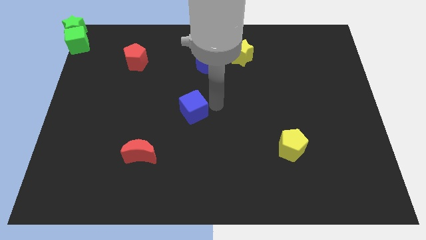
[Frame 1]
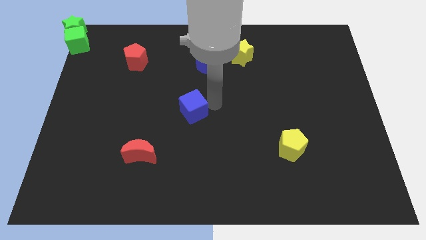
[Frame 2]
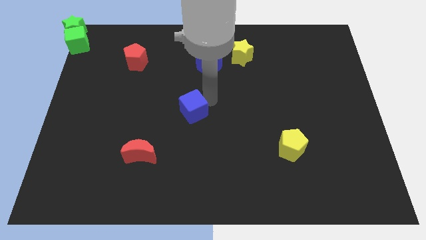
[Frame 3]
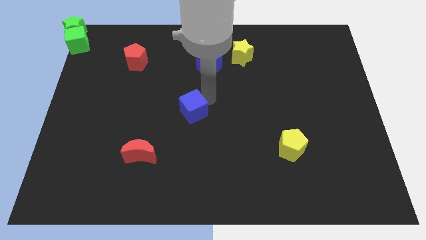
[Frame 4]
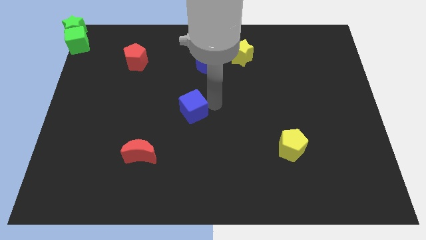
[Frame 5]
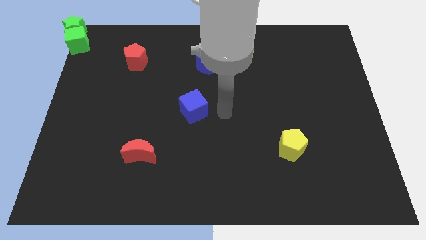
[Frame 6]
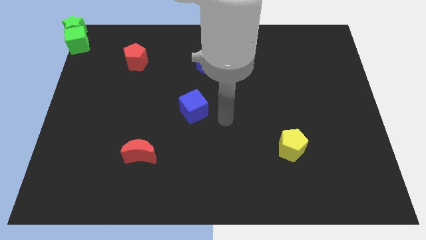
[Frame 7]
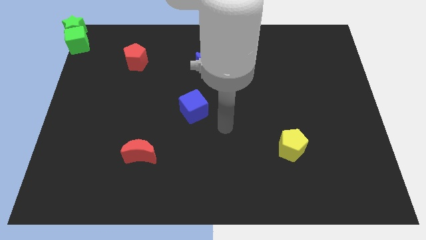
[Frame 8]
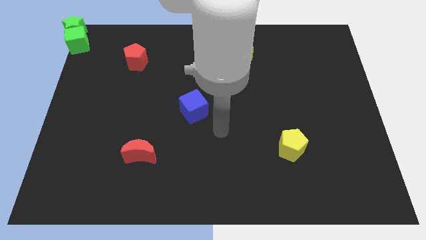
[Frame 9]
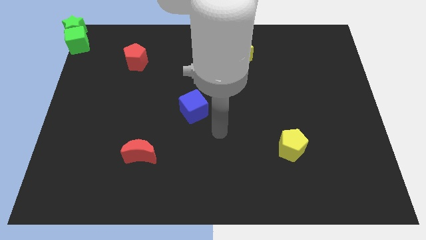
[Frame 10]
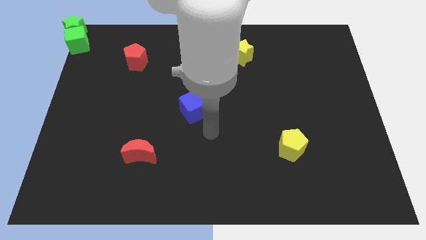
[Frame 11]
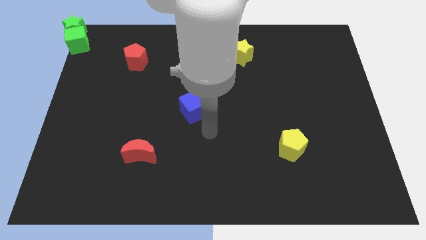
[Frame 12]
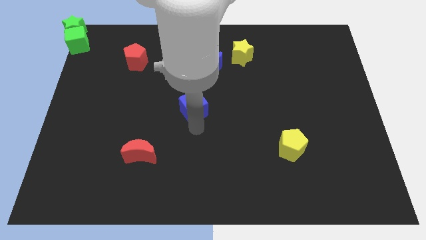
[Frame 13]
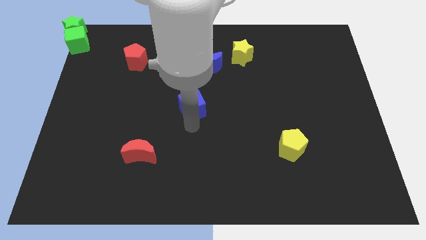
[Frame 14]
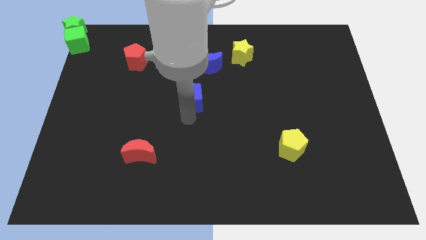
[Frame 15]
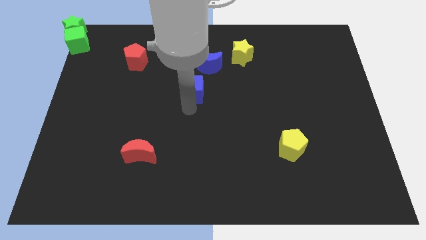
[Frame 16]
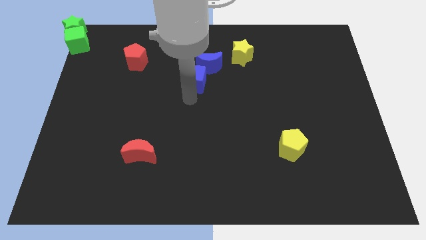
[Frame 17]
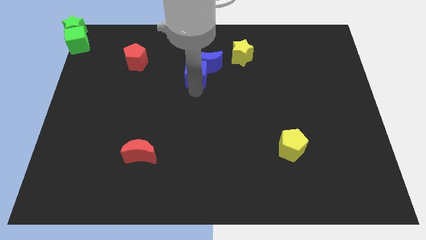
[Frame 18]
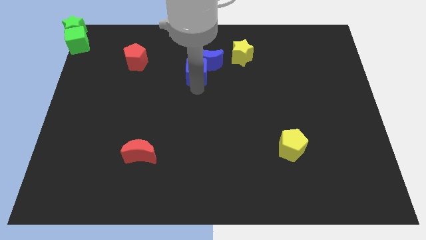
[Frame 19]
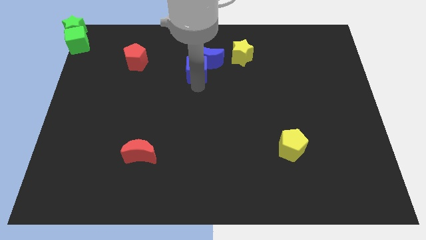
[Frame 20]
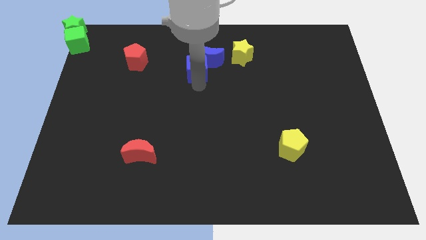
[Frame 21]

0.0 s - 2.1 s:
push the blue cube into the blue crescent

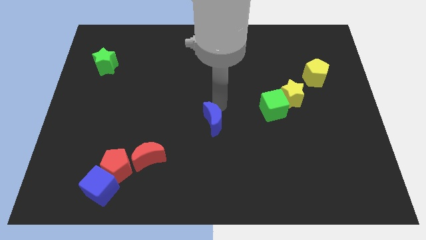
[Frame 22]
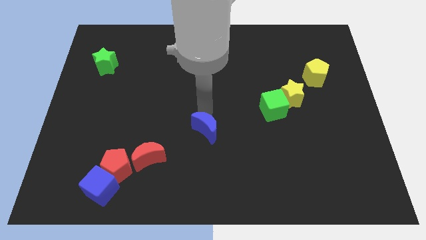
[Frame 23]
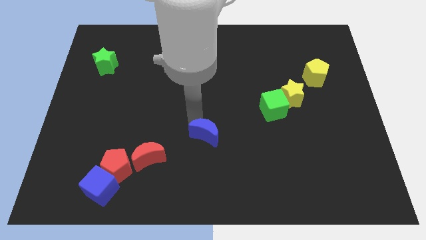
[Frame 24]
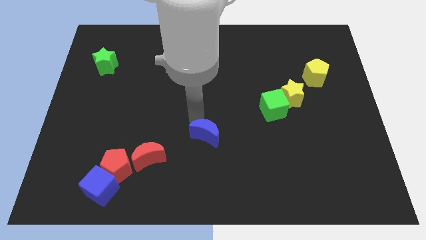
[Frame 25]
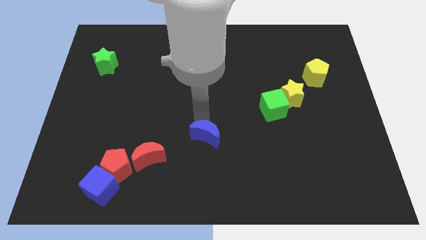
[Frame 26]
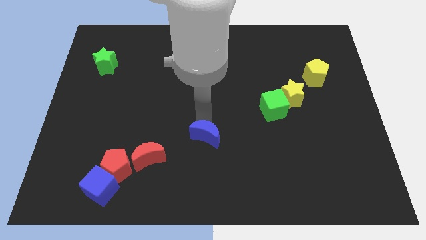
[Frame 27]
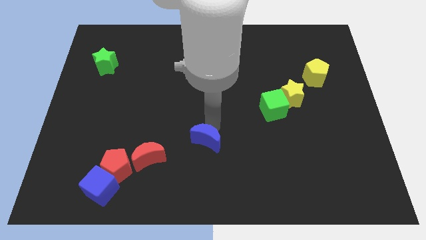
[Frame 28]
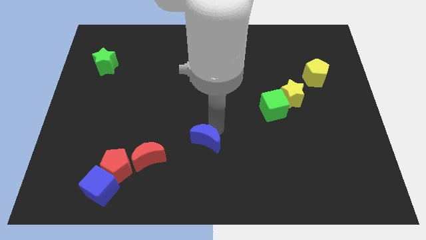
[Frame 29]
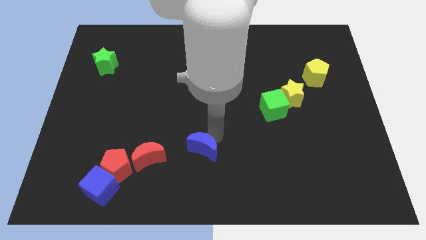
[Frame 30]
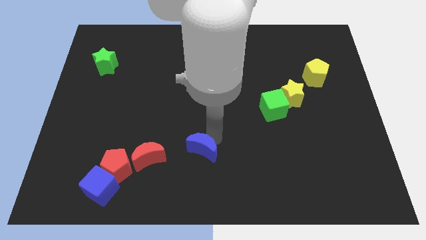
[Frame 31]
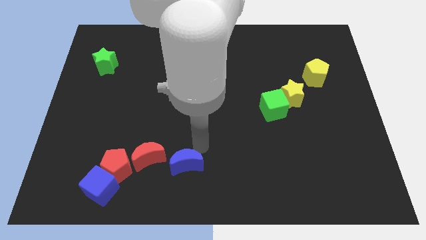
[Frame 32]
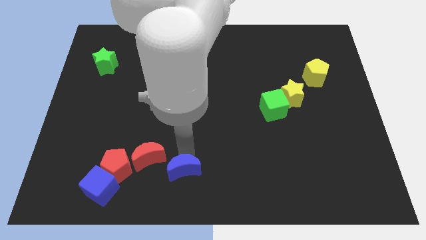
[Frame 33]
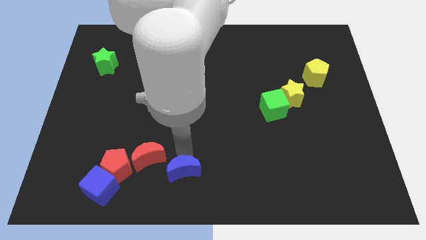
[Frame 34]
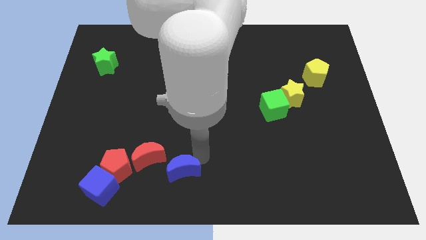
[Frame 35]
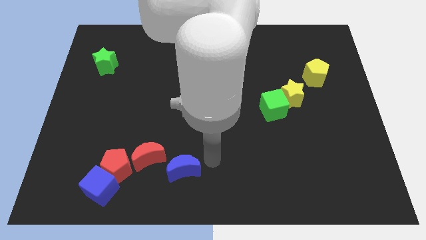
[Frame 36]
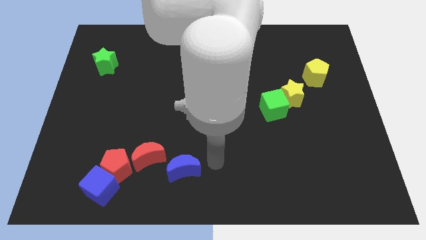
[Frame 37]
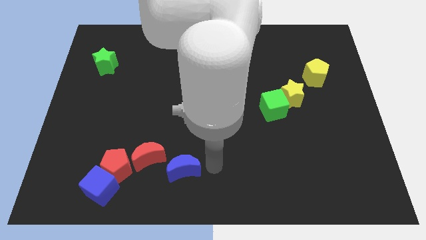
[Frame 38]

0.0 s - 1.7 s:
push blue moon towards bottom center

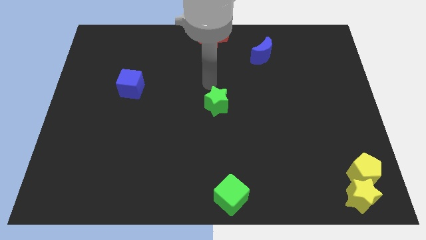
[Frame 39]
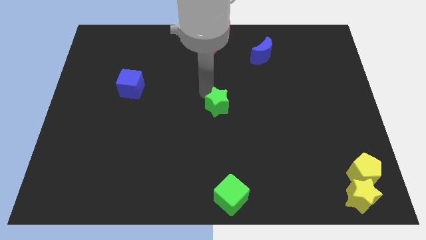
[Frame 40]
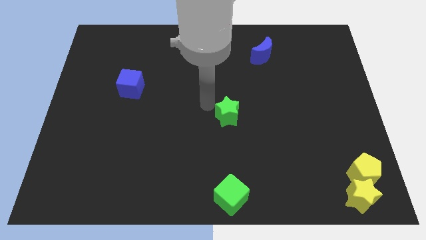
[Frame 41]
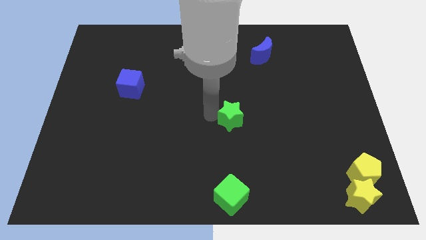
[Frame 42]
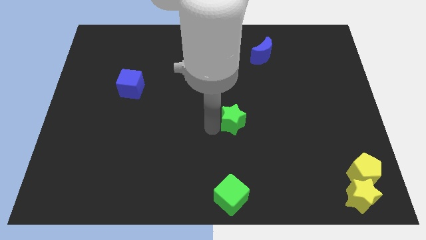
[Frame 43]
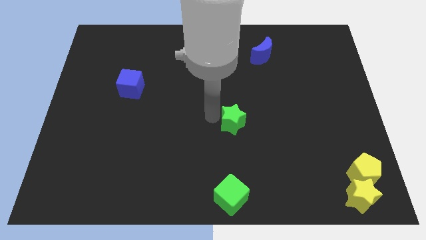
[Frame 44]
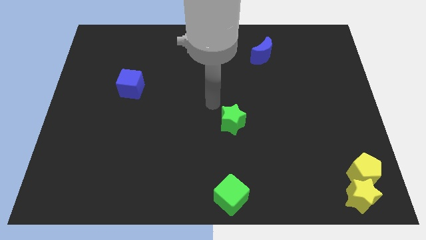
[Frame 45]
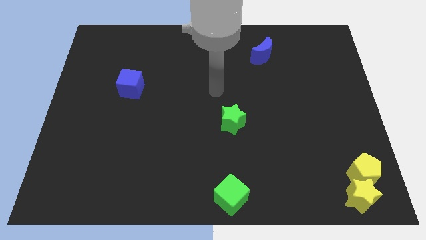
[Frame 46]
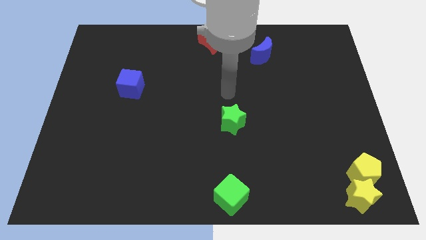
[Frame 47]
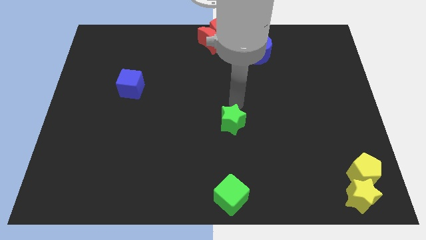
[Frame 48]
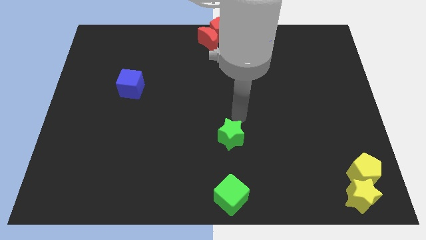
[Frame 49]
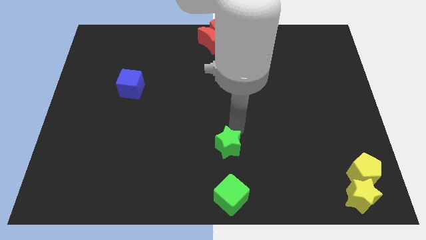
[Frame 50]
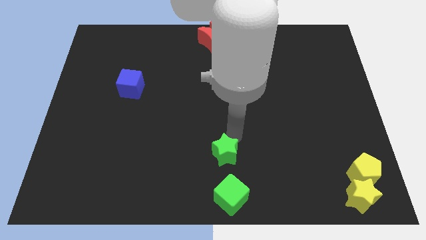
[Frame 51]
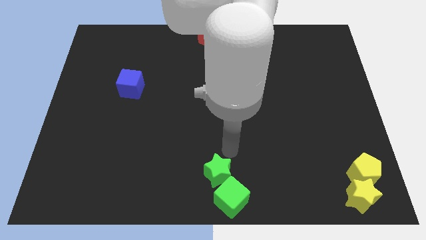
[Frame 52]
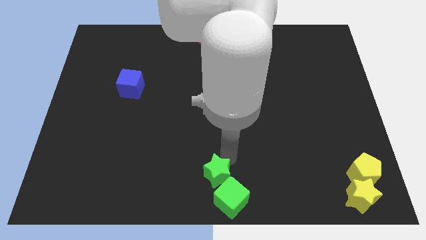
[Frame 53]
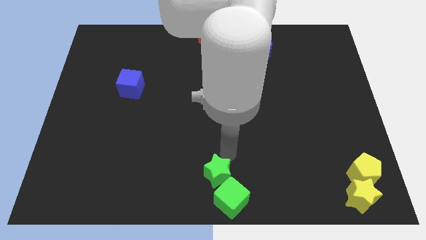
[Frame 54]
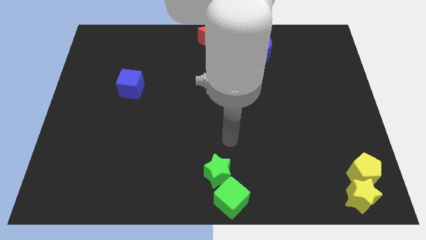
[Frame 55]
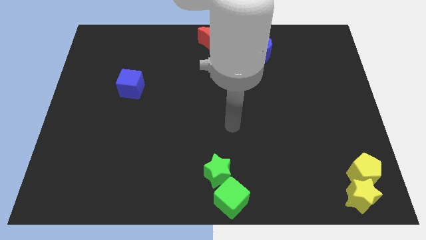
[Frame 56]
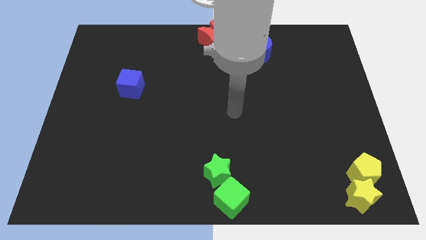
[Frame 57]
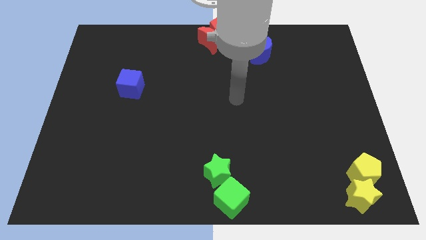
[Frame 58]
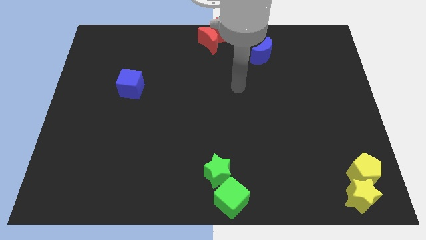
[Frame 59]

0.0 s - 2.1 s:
push the green star on top of green cube

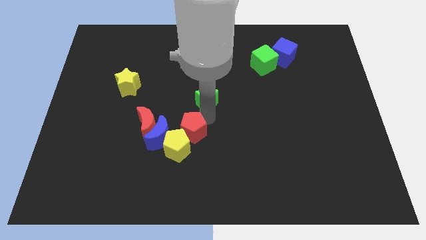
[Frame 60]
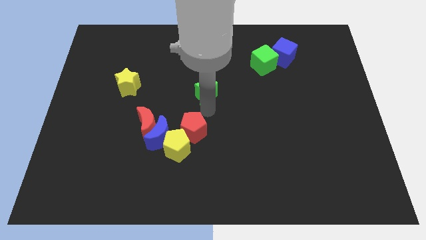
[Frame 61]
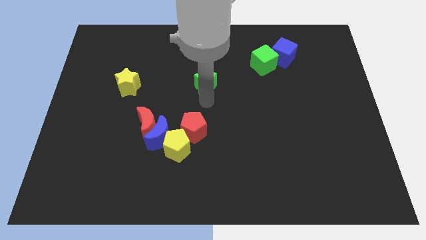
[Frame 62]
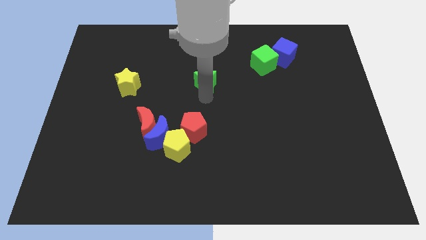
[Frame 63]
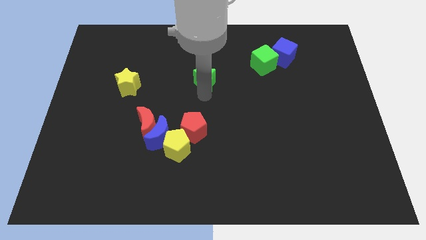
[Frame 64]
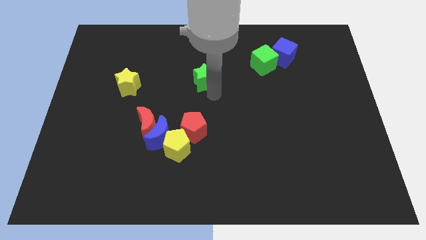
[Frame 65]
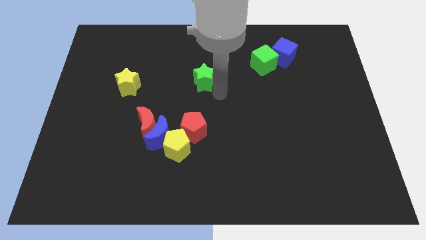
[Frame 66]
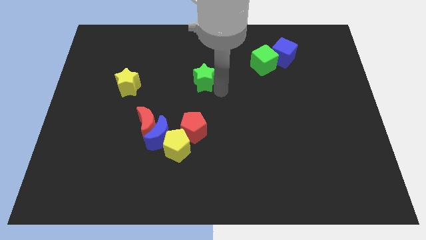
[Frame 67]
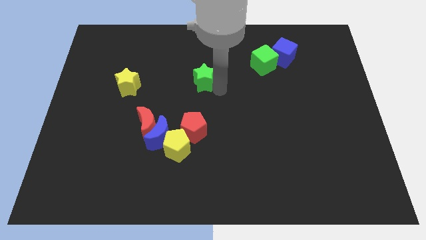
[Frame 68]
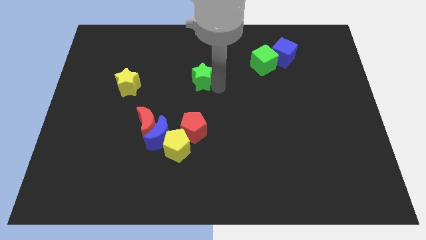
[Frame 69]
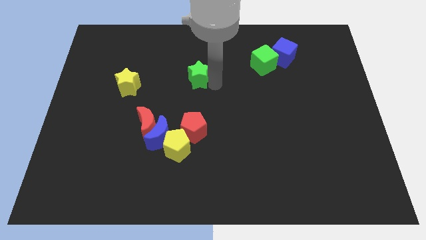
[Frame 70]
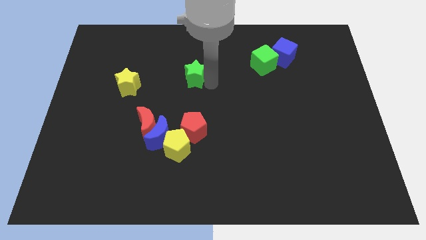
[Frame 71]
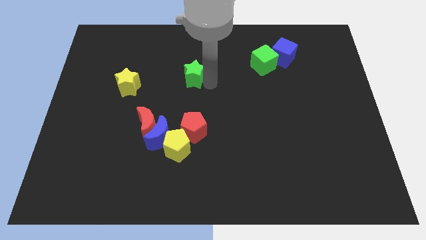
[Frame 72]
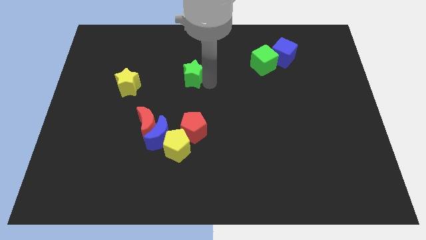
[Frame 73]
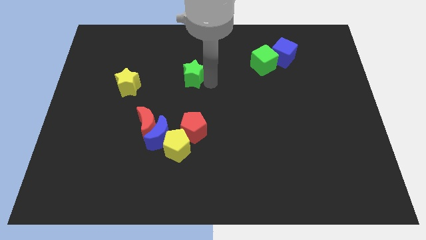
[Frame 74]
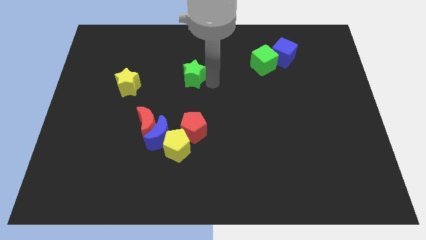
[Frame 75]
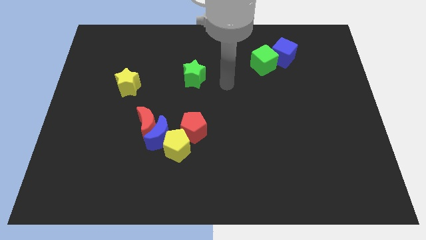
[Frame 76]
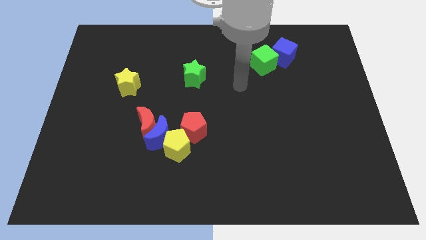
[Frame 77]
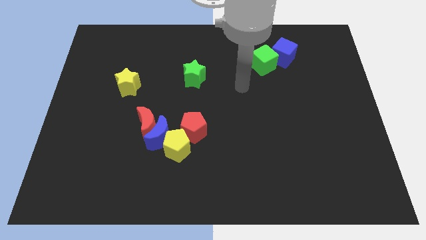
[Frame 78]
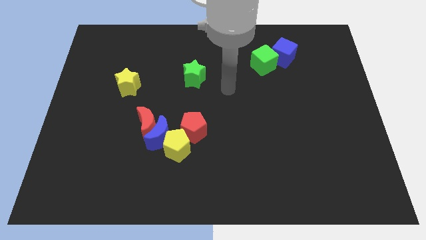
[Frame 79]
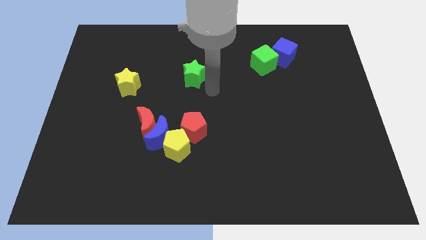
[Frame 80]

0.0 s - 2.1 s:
move green star away from red pentagon

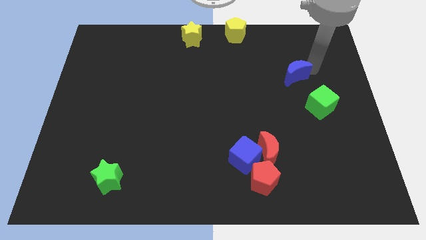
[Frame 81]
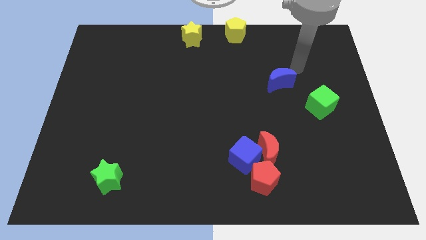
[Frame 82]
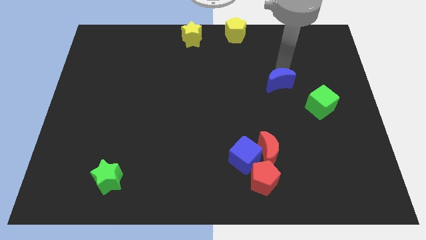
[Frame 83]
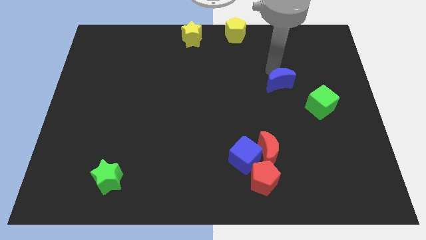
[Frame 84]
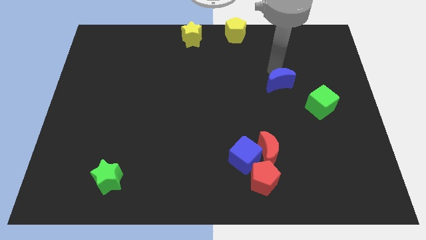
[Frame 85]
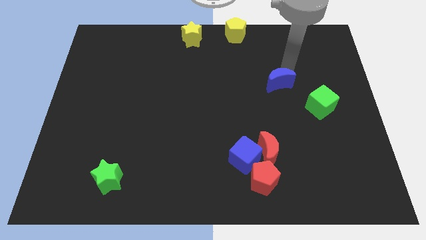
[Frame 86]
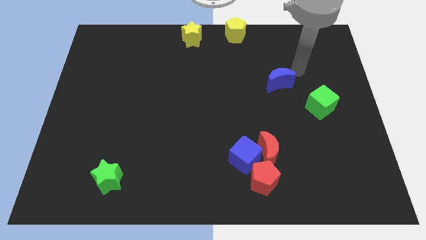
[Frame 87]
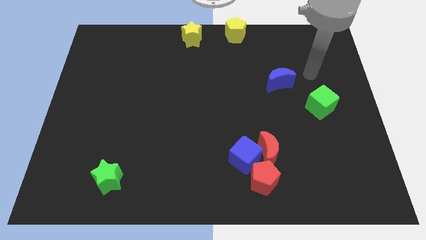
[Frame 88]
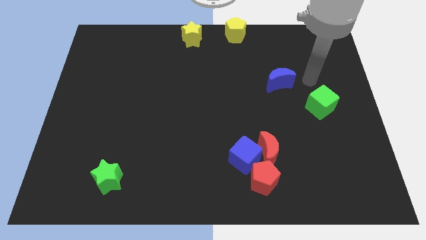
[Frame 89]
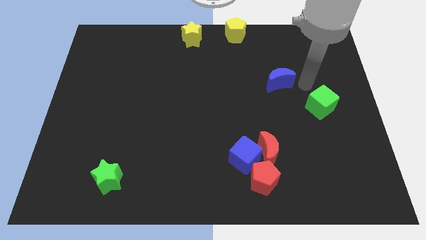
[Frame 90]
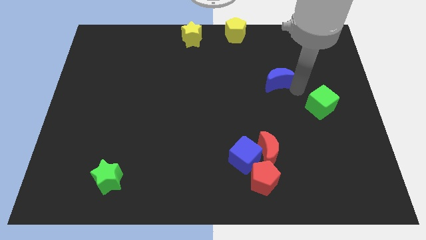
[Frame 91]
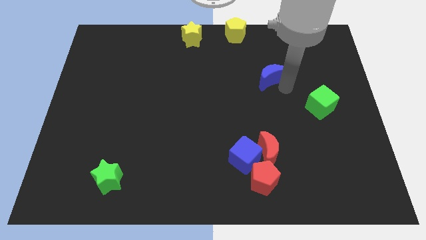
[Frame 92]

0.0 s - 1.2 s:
move the arm close to the blue crescent
